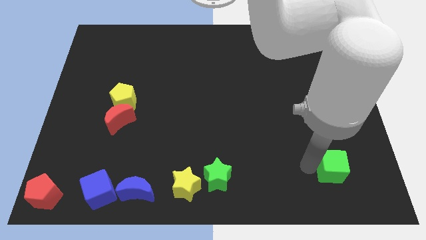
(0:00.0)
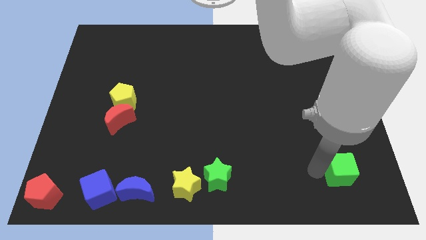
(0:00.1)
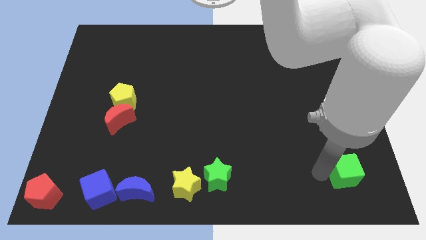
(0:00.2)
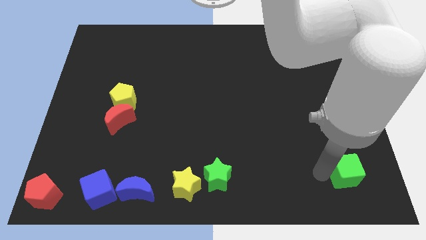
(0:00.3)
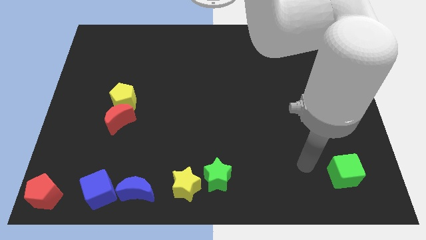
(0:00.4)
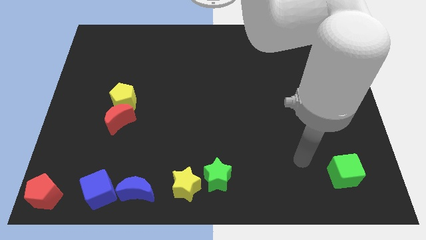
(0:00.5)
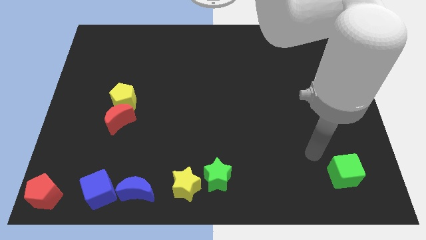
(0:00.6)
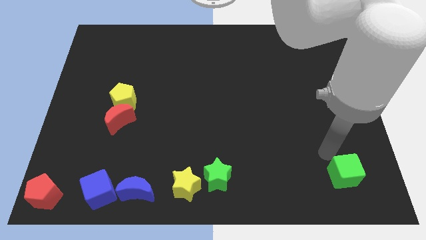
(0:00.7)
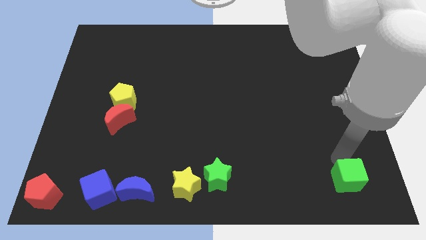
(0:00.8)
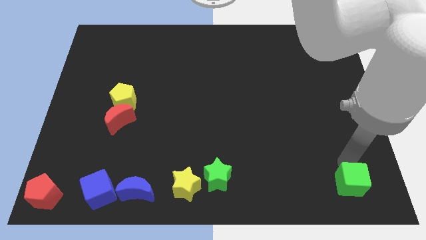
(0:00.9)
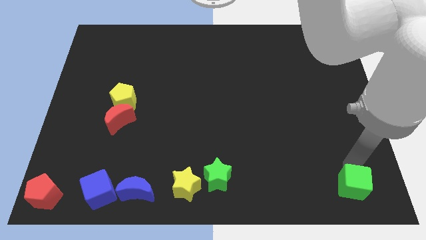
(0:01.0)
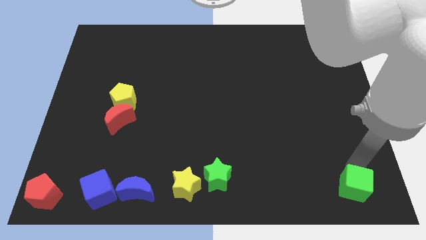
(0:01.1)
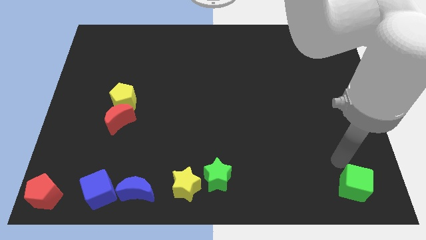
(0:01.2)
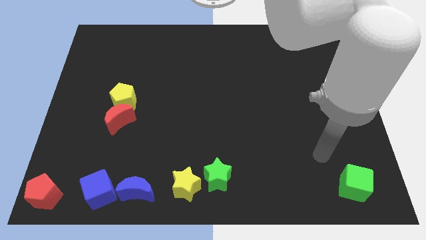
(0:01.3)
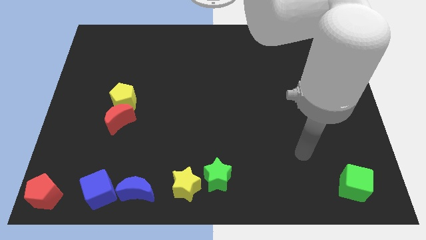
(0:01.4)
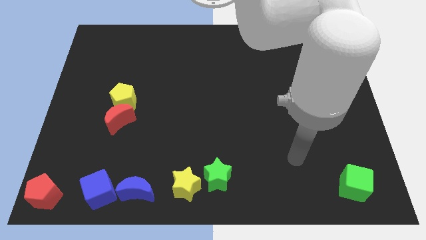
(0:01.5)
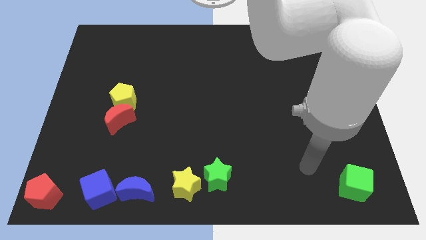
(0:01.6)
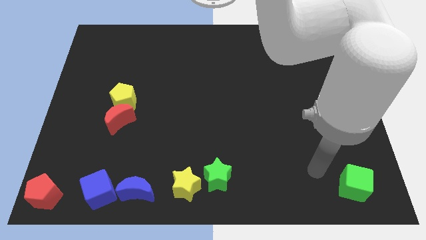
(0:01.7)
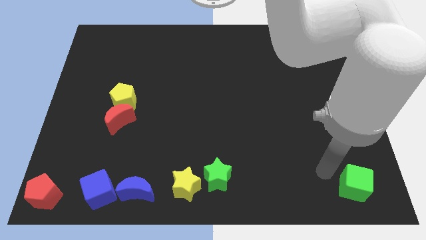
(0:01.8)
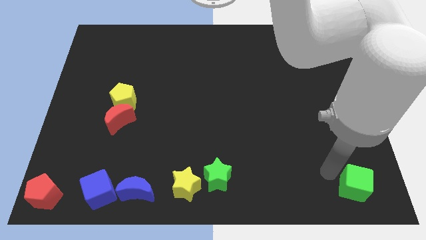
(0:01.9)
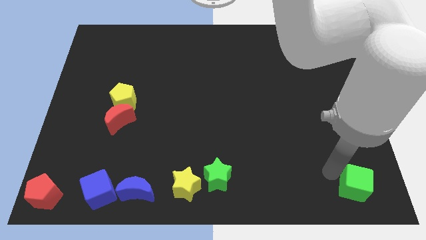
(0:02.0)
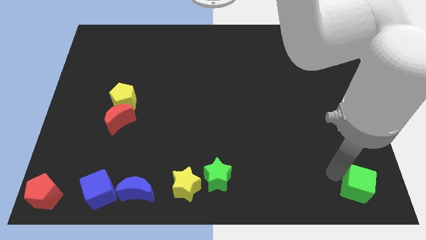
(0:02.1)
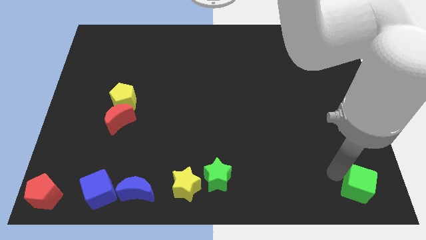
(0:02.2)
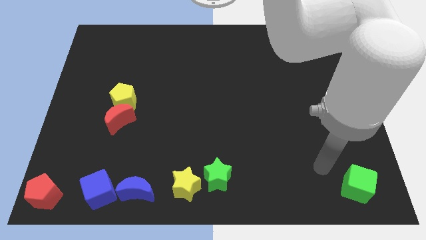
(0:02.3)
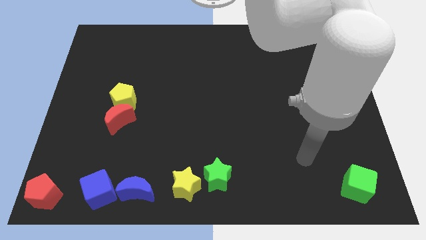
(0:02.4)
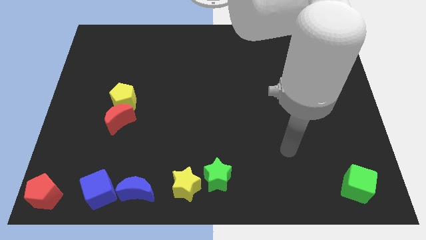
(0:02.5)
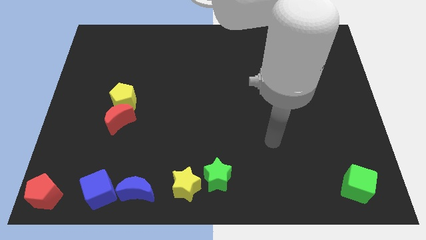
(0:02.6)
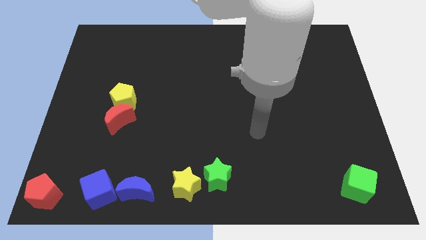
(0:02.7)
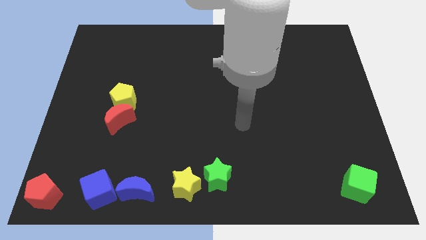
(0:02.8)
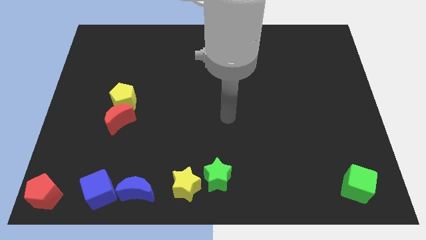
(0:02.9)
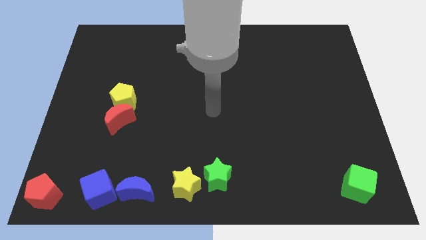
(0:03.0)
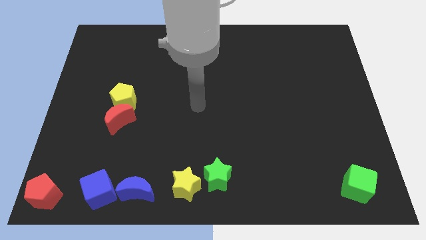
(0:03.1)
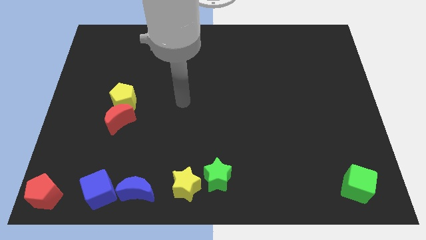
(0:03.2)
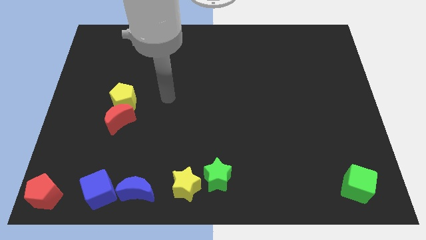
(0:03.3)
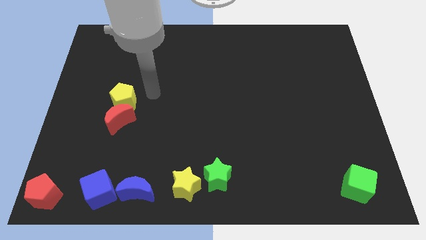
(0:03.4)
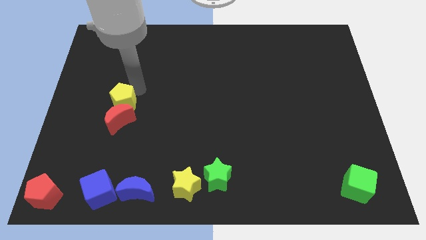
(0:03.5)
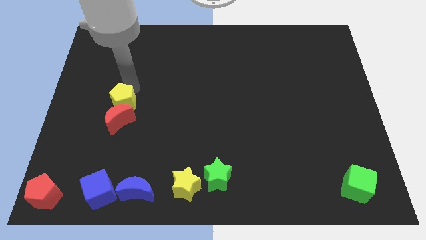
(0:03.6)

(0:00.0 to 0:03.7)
move the green cube slightly to the bottom right

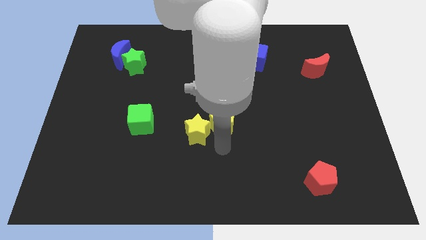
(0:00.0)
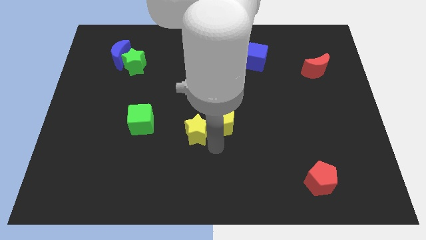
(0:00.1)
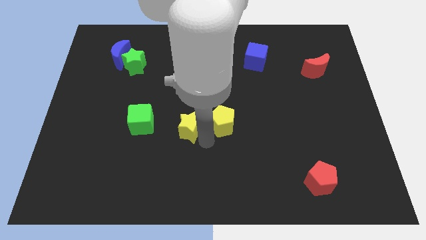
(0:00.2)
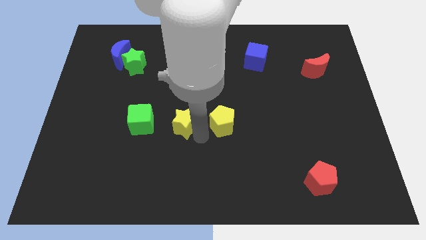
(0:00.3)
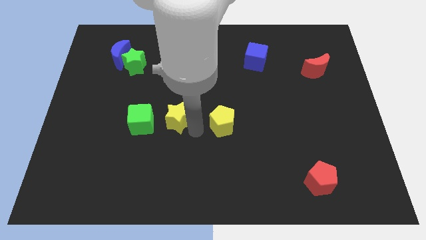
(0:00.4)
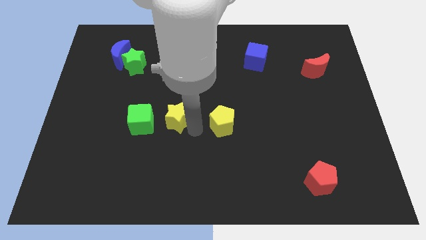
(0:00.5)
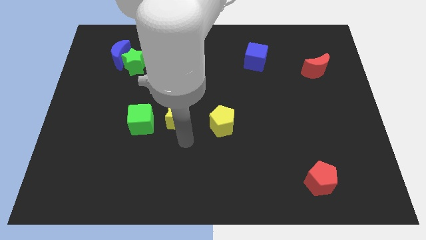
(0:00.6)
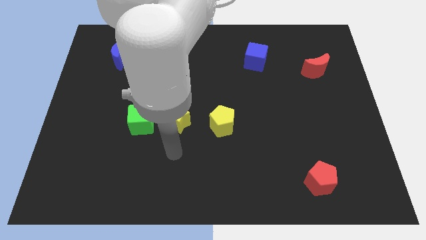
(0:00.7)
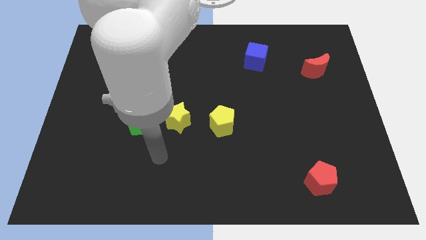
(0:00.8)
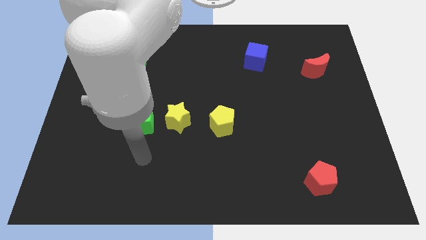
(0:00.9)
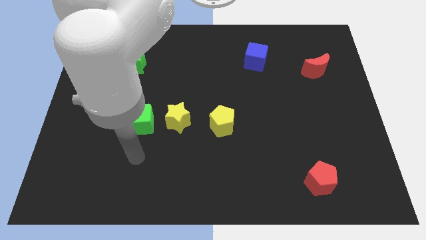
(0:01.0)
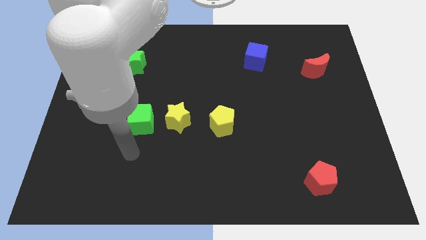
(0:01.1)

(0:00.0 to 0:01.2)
move the star between the green cube and yellow penatgon

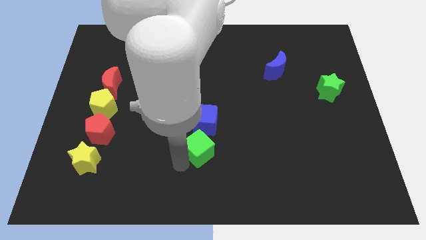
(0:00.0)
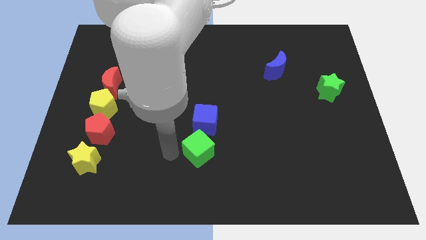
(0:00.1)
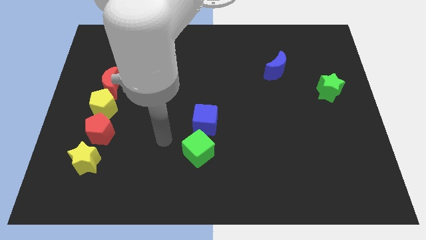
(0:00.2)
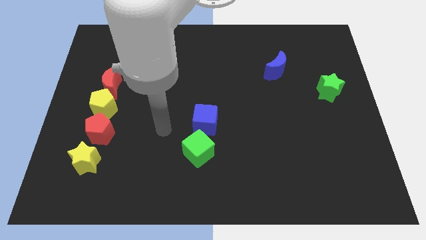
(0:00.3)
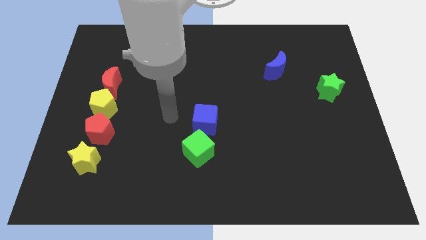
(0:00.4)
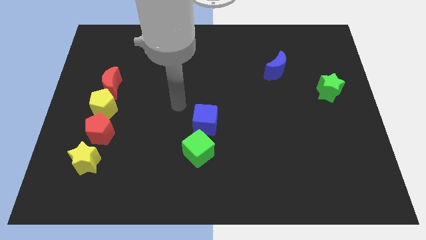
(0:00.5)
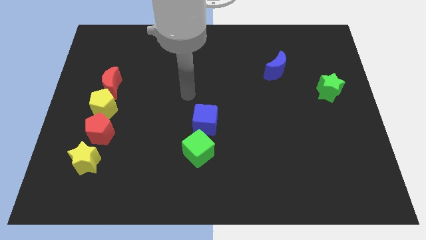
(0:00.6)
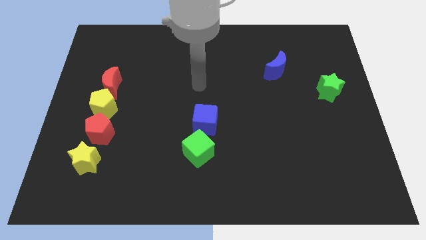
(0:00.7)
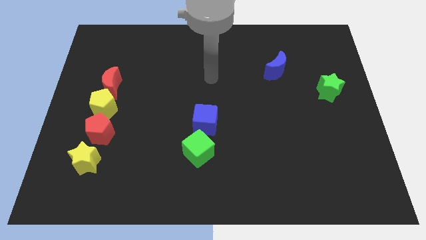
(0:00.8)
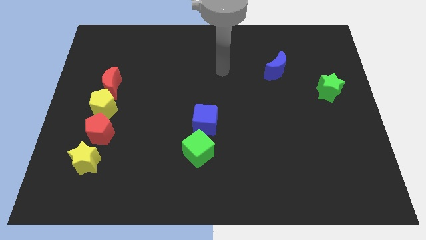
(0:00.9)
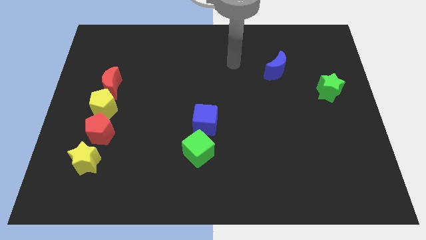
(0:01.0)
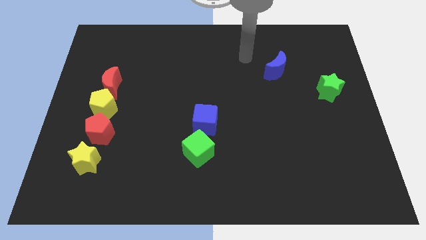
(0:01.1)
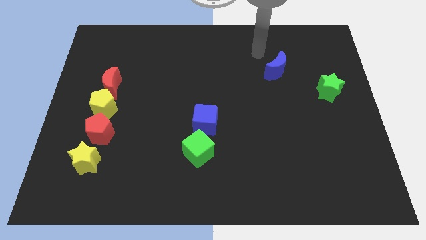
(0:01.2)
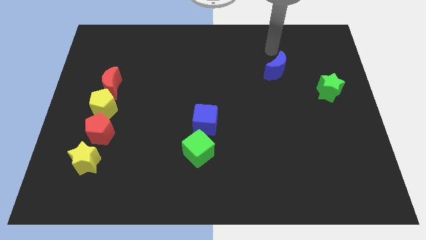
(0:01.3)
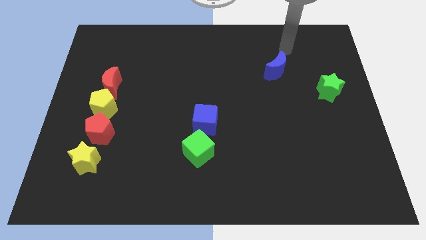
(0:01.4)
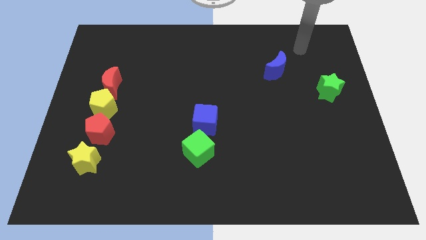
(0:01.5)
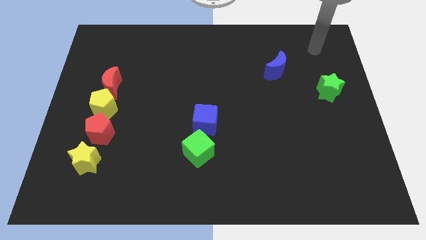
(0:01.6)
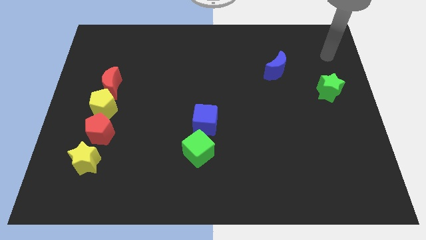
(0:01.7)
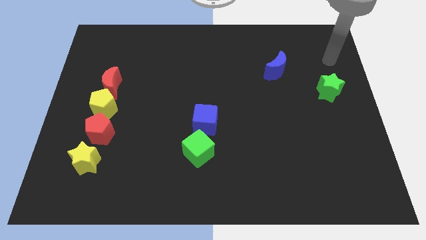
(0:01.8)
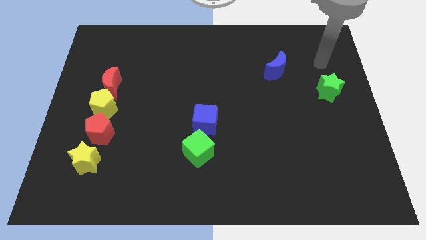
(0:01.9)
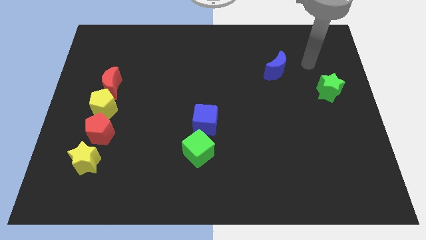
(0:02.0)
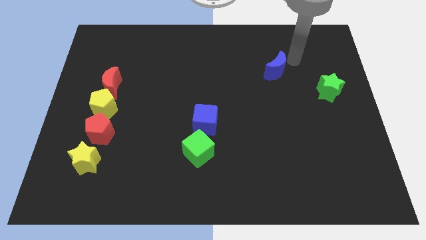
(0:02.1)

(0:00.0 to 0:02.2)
move your hand towards the top of the green star

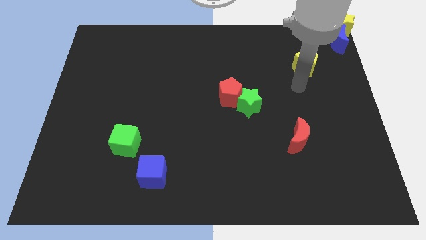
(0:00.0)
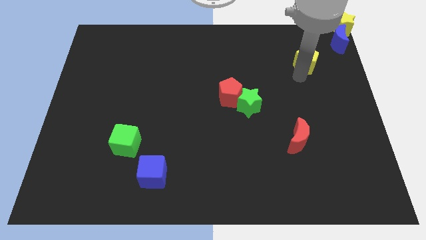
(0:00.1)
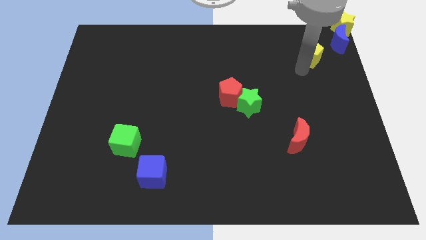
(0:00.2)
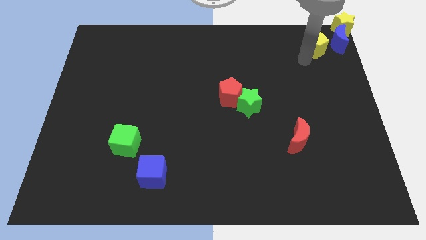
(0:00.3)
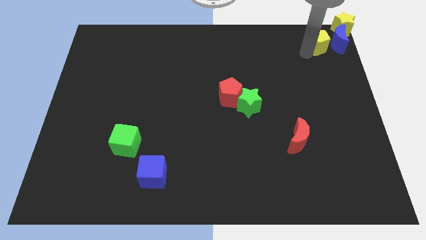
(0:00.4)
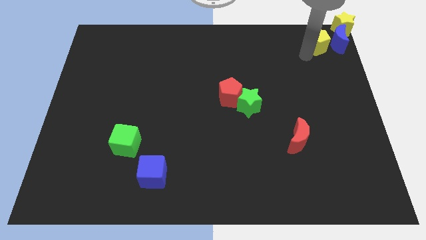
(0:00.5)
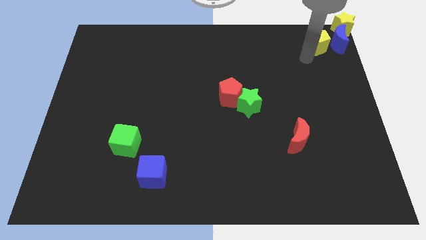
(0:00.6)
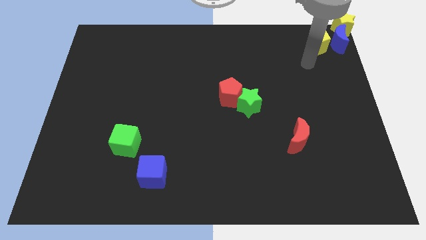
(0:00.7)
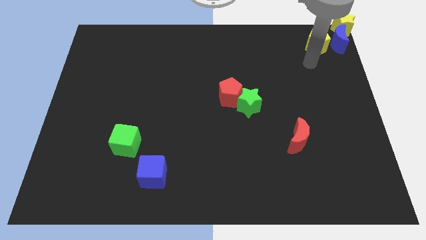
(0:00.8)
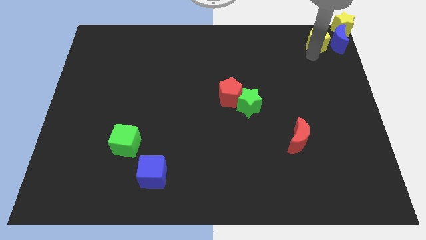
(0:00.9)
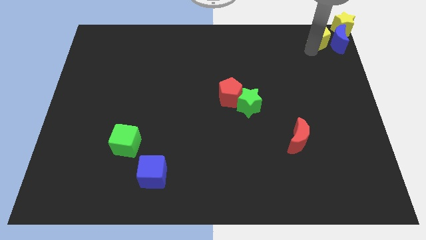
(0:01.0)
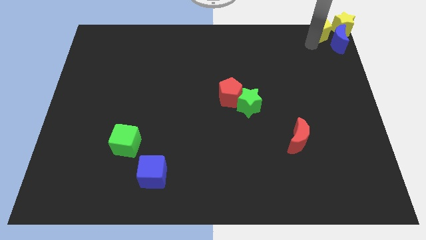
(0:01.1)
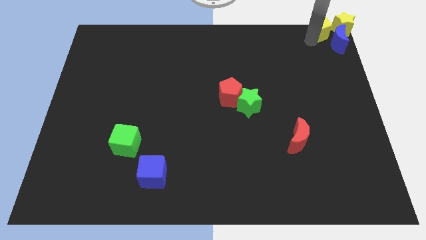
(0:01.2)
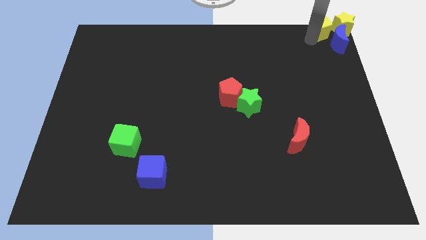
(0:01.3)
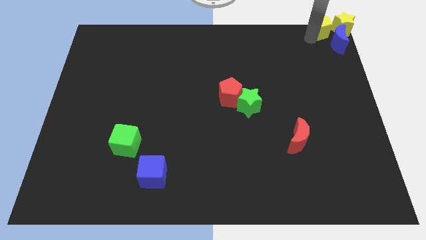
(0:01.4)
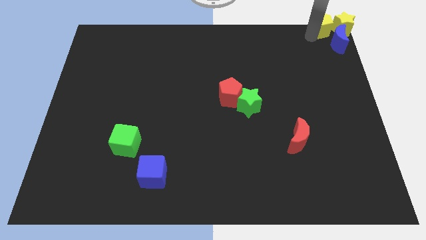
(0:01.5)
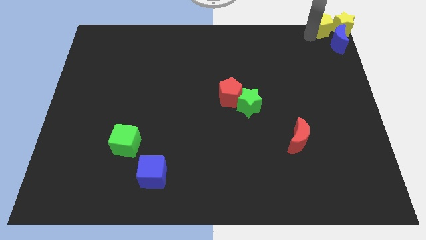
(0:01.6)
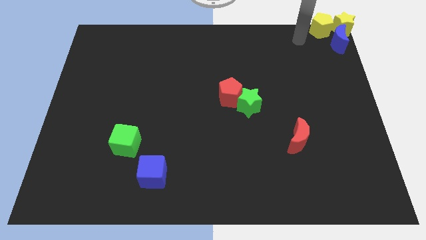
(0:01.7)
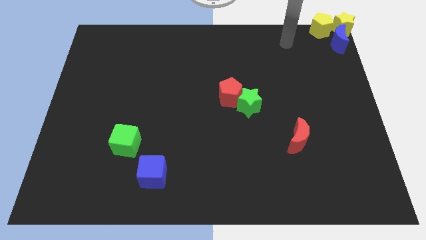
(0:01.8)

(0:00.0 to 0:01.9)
move the yellow pentagon to the left of the yellow star

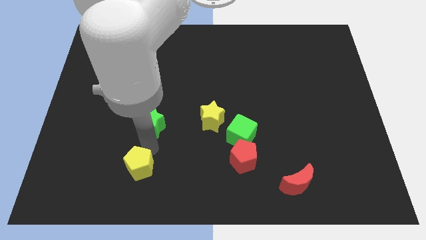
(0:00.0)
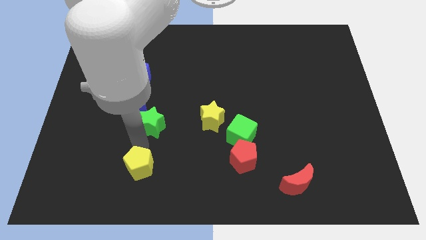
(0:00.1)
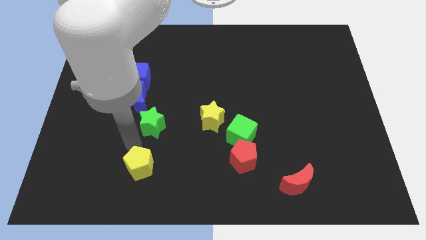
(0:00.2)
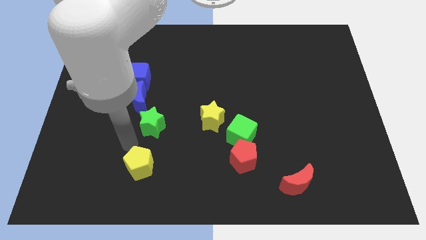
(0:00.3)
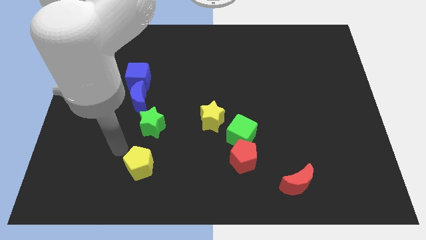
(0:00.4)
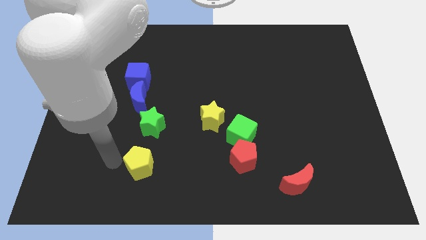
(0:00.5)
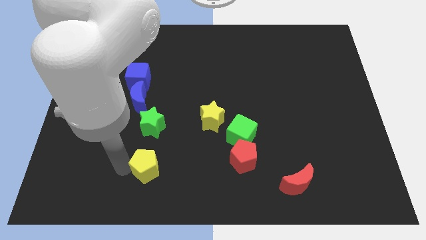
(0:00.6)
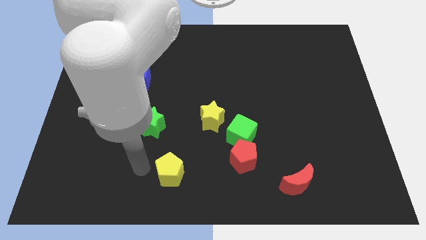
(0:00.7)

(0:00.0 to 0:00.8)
touch the left side of the yellow pentagon
